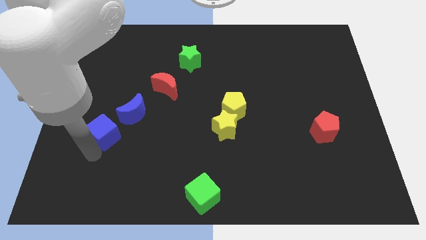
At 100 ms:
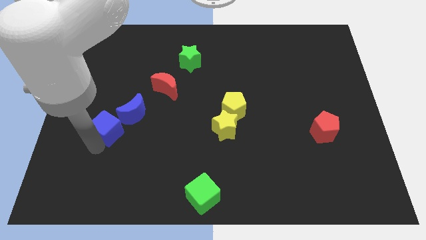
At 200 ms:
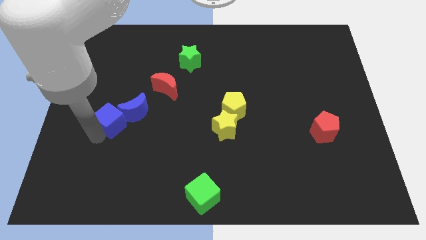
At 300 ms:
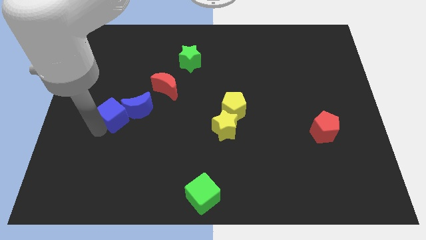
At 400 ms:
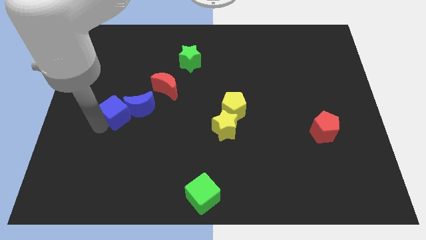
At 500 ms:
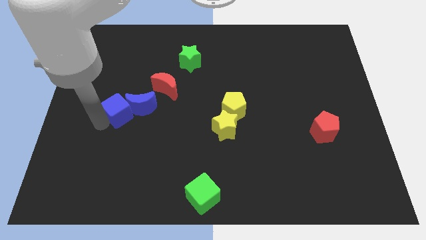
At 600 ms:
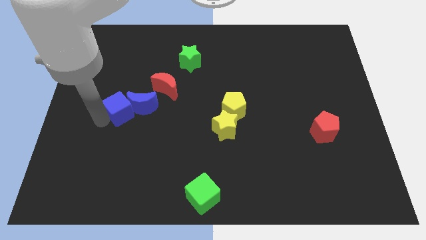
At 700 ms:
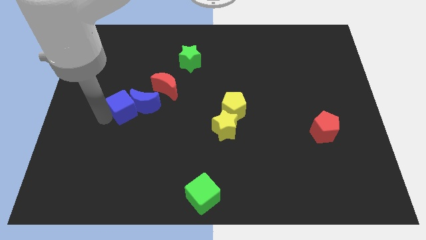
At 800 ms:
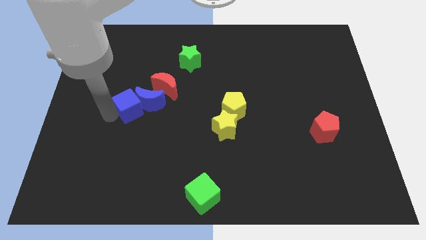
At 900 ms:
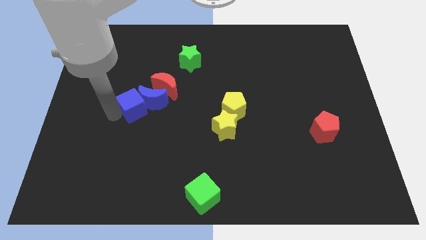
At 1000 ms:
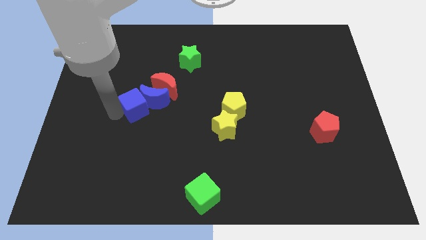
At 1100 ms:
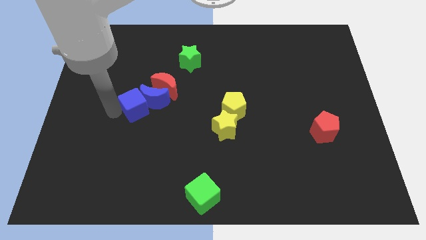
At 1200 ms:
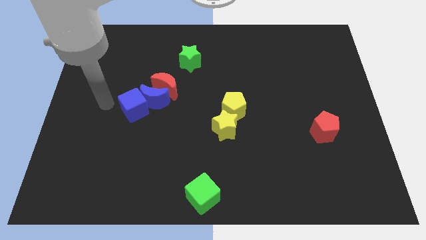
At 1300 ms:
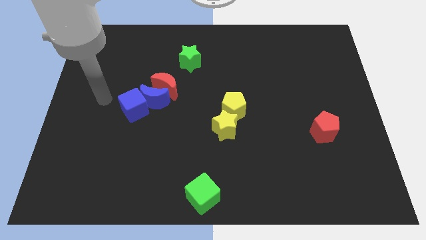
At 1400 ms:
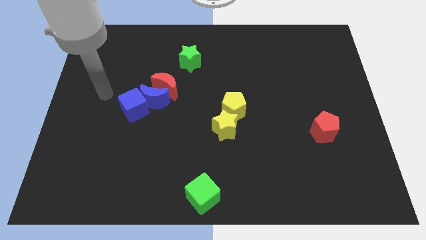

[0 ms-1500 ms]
push the blue cube and blue crescent into red crescent

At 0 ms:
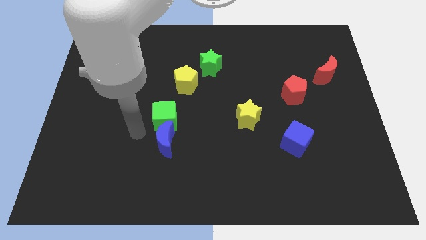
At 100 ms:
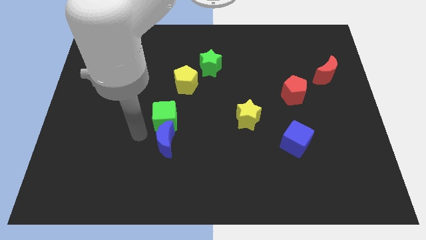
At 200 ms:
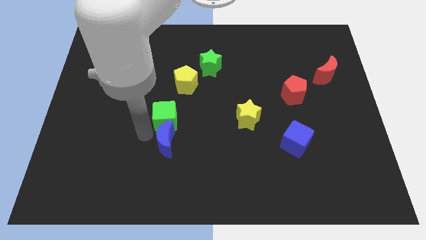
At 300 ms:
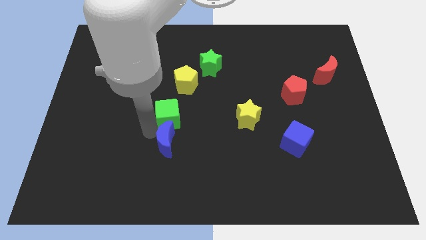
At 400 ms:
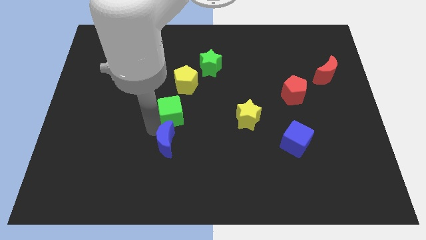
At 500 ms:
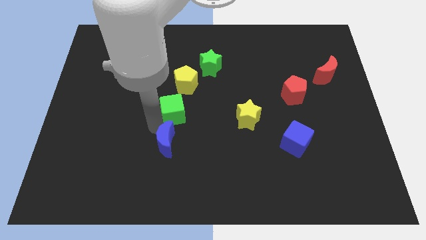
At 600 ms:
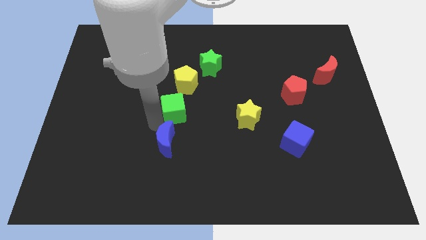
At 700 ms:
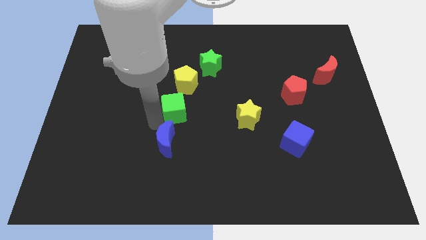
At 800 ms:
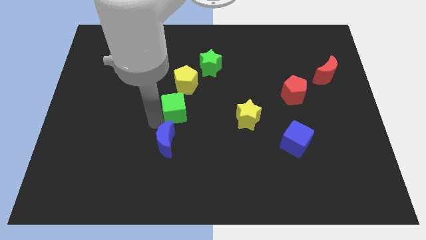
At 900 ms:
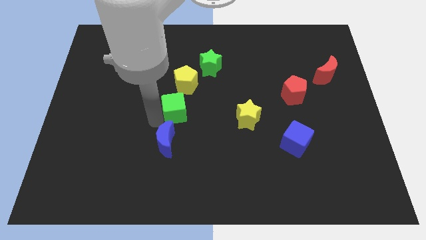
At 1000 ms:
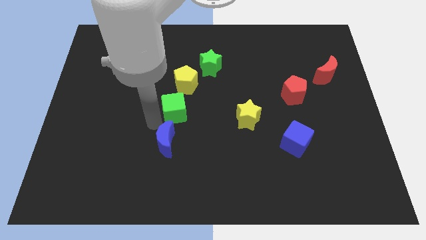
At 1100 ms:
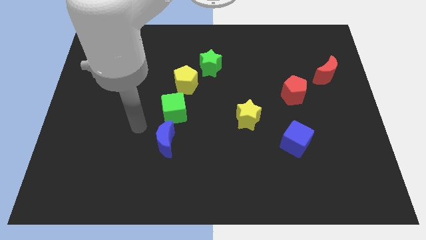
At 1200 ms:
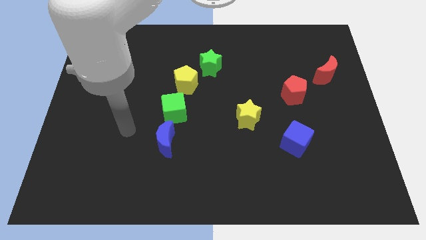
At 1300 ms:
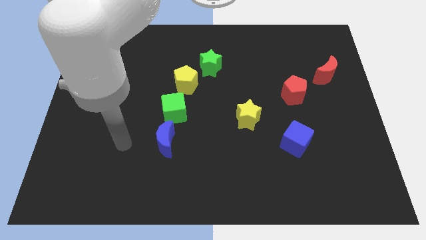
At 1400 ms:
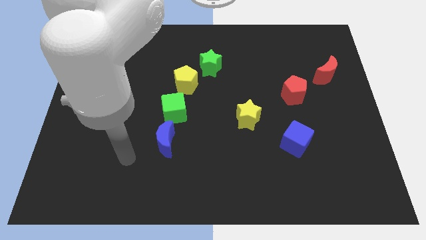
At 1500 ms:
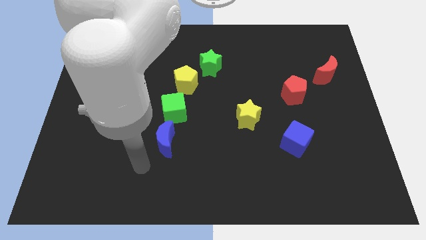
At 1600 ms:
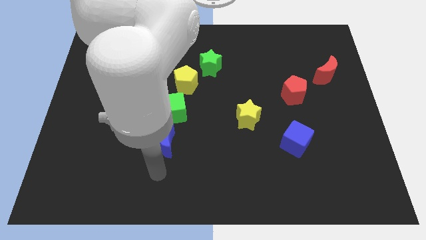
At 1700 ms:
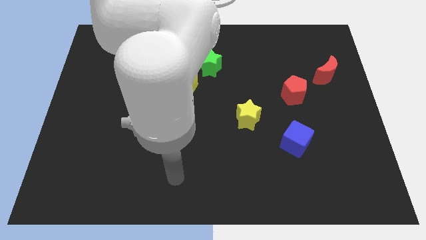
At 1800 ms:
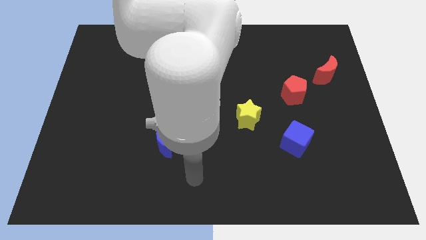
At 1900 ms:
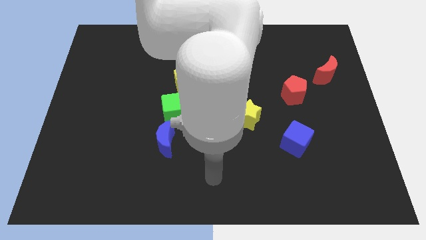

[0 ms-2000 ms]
slightly move the green cube towards the yellow pentagon

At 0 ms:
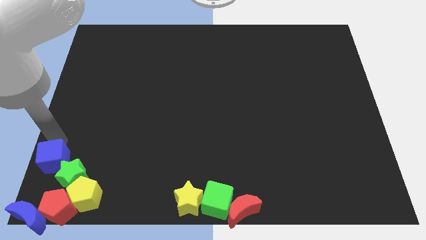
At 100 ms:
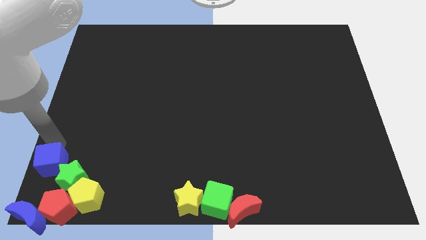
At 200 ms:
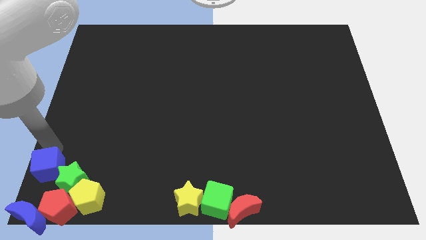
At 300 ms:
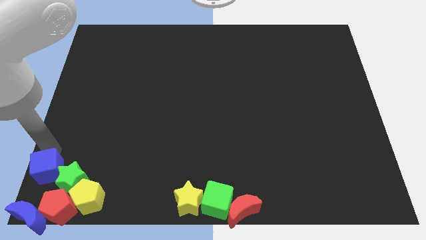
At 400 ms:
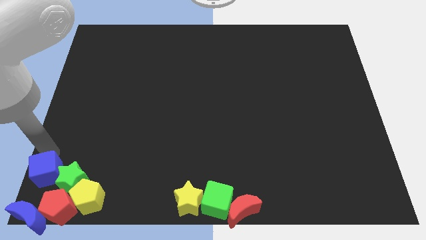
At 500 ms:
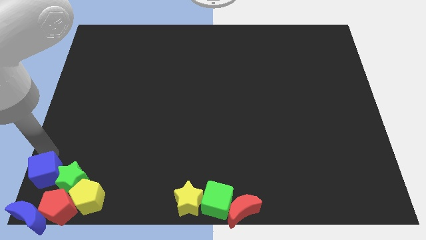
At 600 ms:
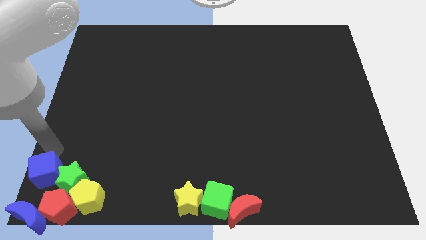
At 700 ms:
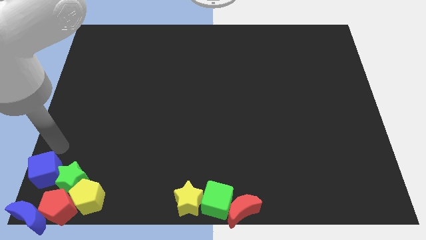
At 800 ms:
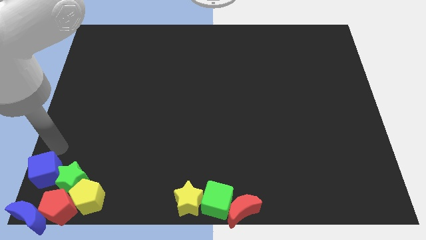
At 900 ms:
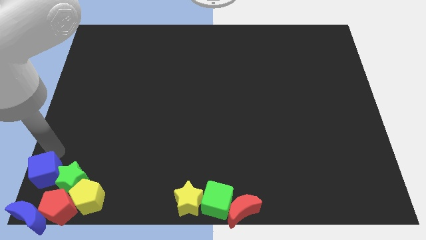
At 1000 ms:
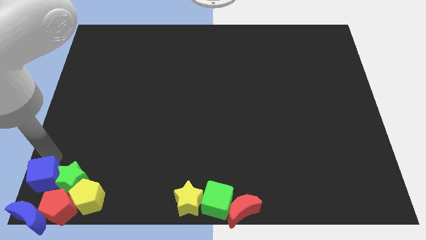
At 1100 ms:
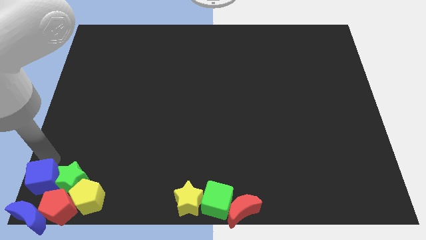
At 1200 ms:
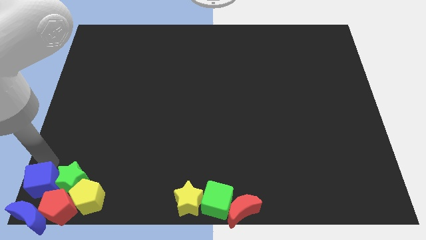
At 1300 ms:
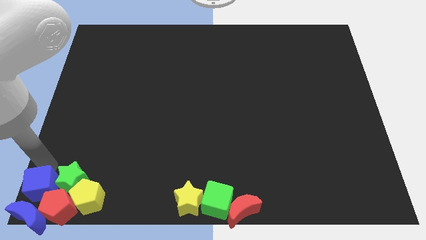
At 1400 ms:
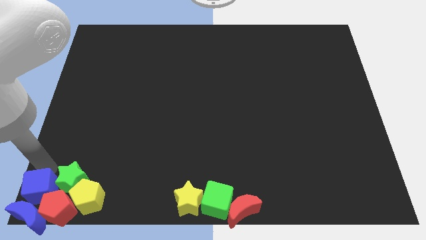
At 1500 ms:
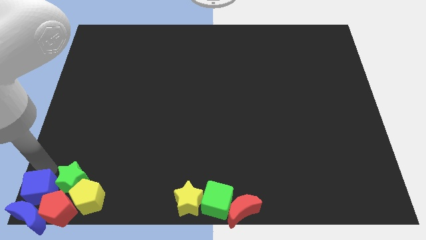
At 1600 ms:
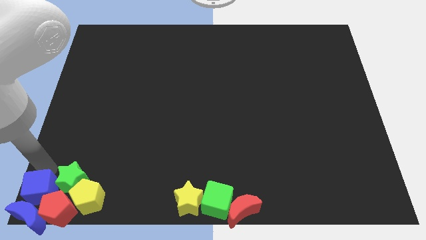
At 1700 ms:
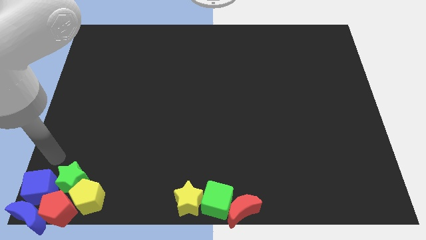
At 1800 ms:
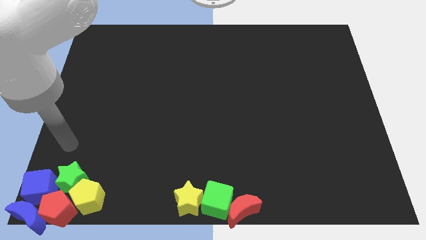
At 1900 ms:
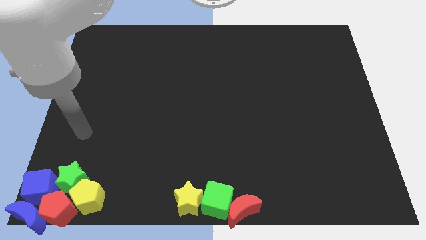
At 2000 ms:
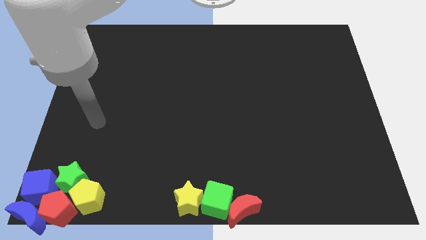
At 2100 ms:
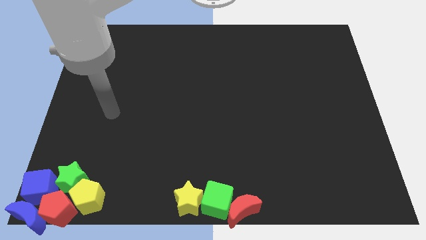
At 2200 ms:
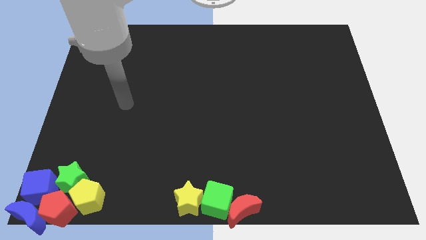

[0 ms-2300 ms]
make a group out of blue blocksgreen stared pentagon and yellow pentagon

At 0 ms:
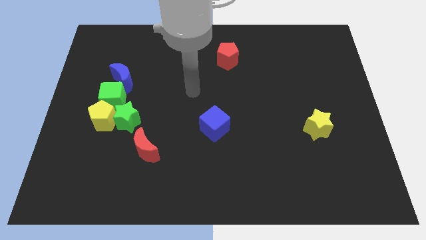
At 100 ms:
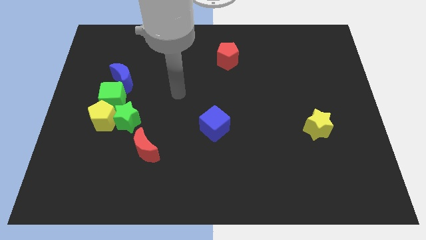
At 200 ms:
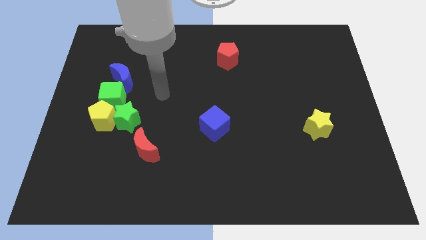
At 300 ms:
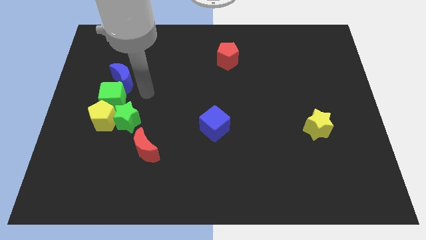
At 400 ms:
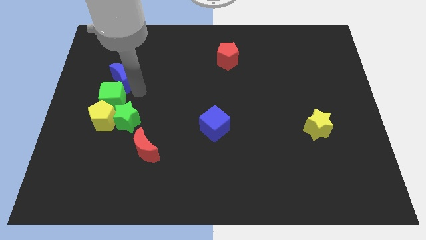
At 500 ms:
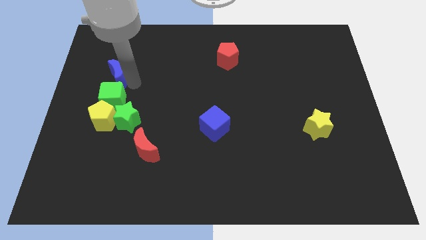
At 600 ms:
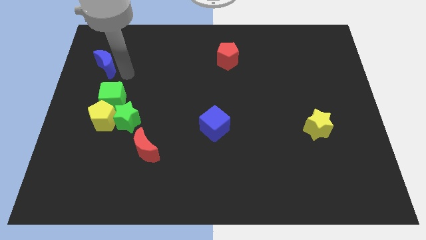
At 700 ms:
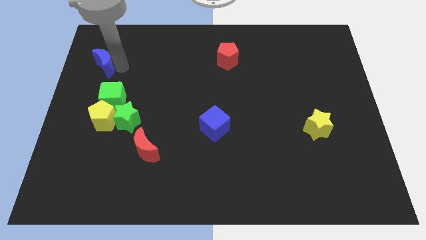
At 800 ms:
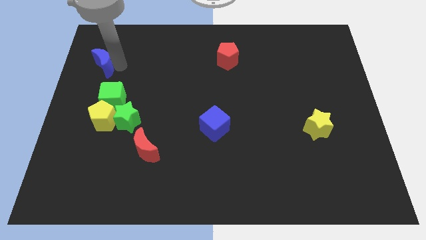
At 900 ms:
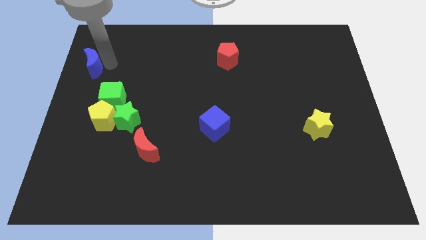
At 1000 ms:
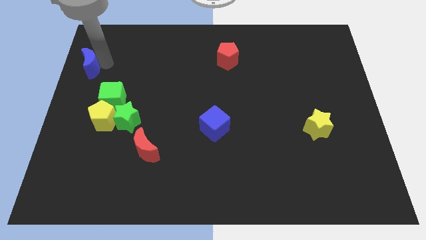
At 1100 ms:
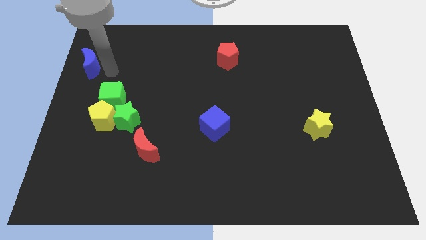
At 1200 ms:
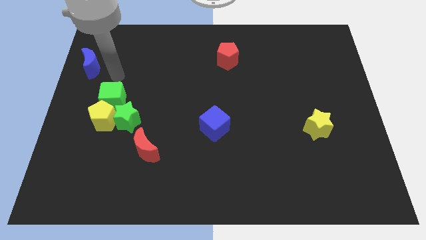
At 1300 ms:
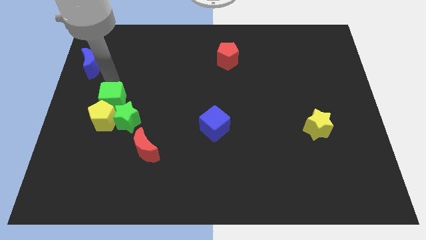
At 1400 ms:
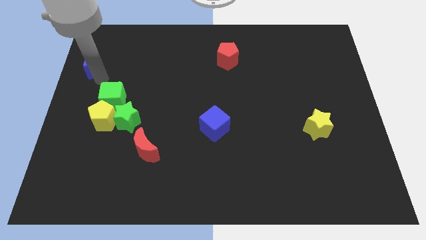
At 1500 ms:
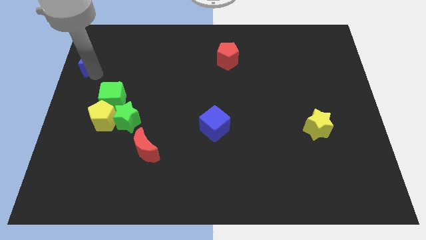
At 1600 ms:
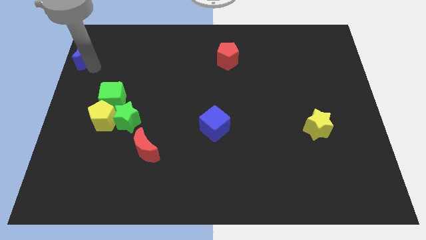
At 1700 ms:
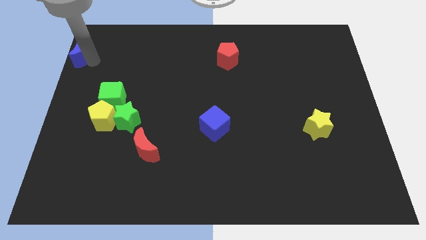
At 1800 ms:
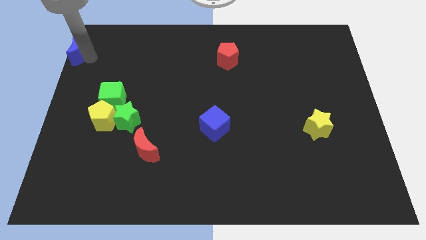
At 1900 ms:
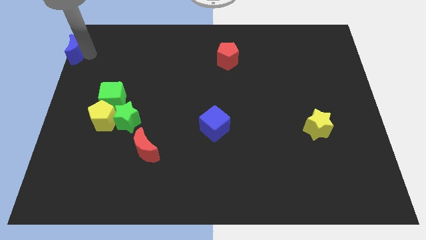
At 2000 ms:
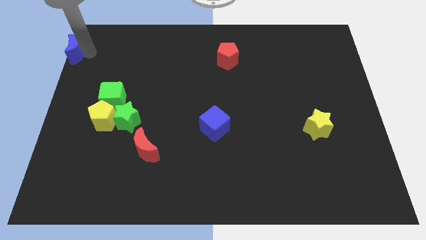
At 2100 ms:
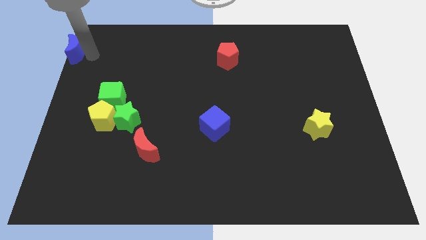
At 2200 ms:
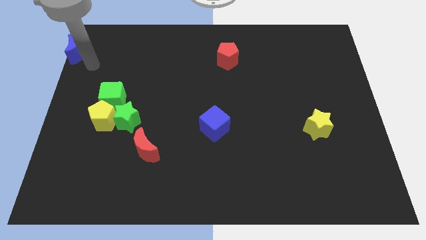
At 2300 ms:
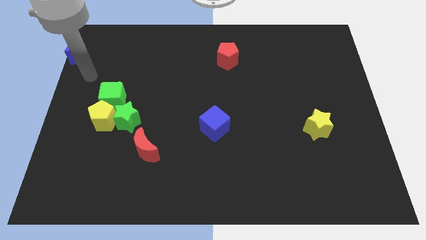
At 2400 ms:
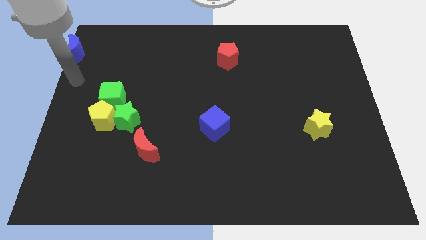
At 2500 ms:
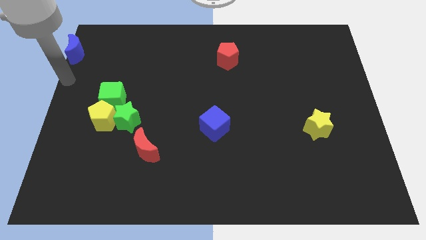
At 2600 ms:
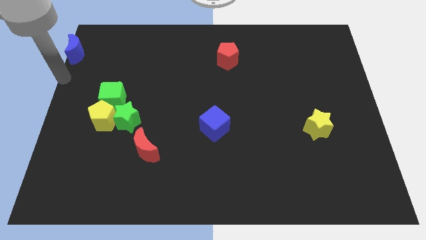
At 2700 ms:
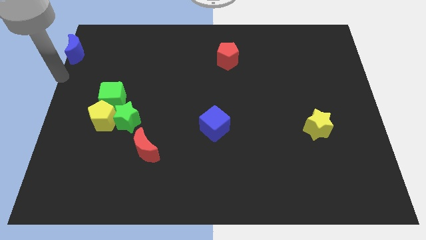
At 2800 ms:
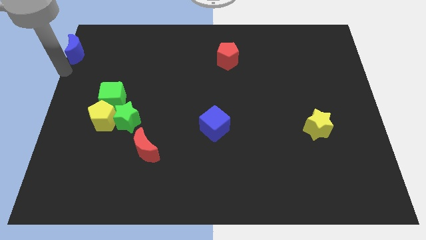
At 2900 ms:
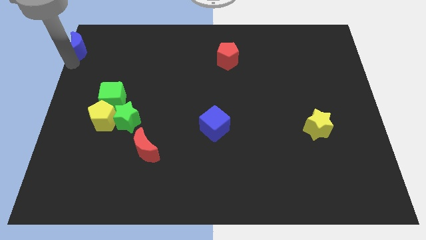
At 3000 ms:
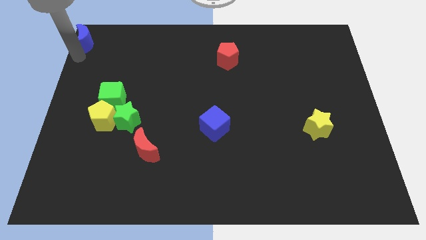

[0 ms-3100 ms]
place the blue crescent at the top left corner
